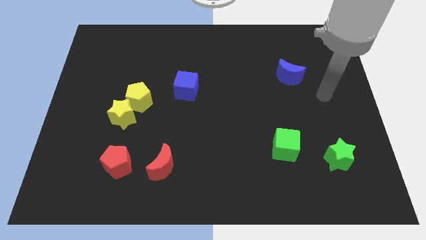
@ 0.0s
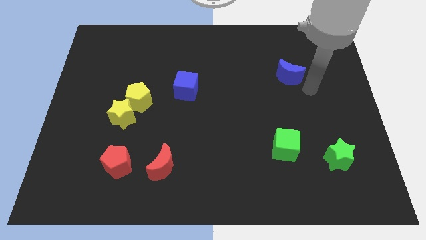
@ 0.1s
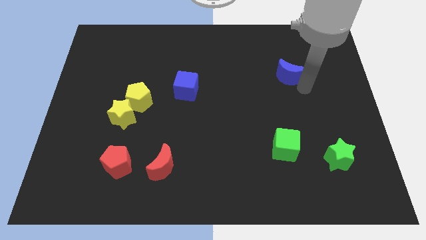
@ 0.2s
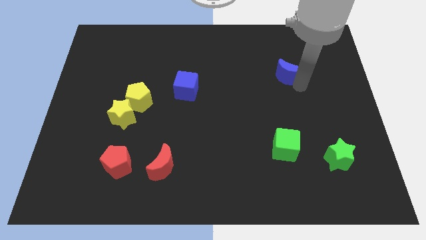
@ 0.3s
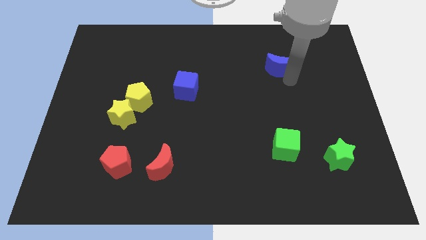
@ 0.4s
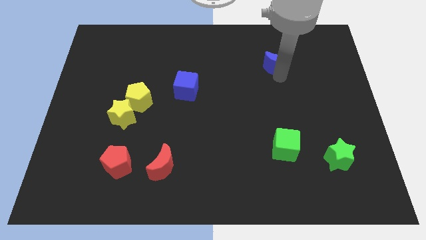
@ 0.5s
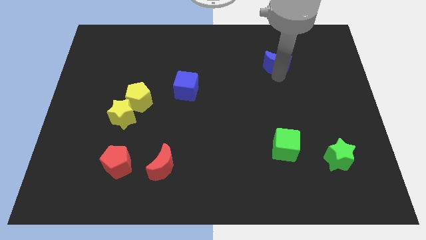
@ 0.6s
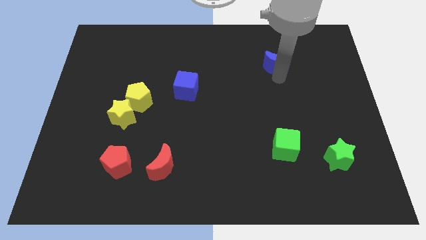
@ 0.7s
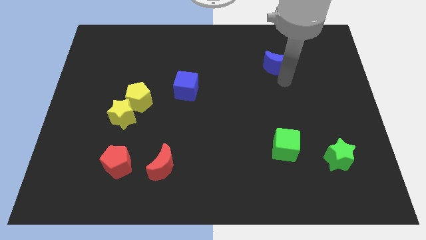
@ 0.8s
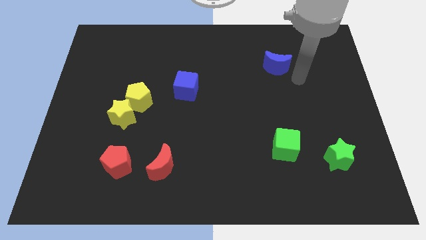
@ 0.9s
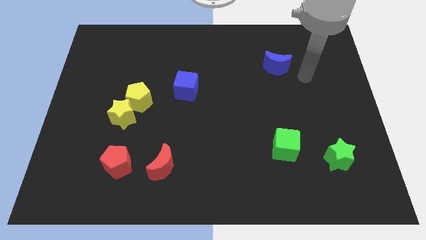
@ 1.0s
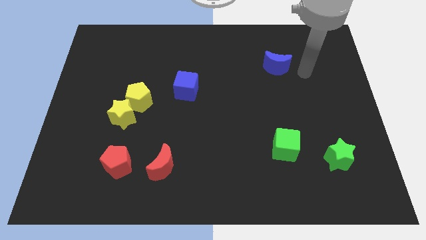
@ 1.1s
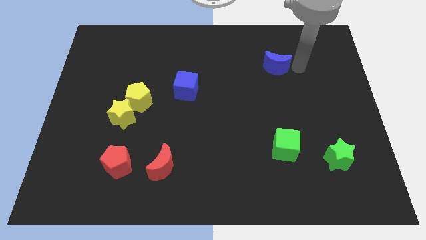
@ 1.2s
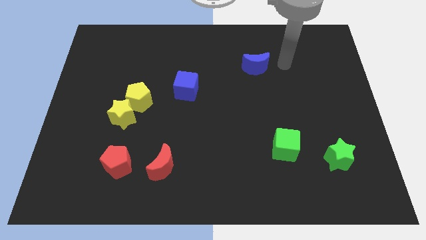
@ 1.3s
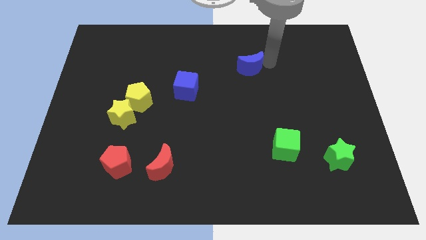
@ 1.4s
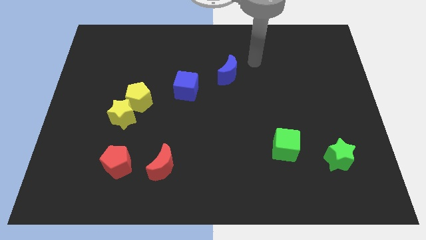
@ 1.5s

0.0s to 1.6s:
move the blue moon slightly left

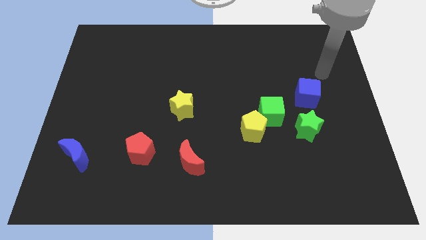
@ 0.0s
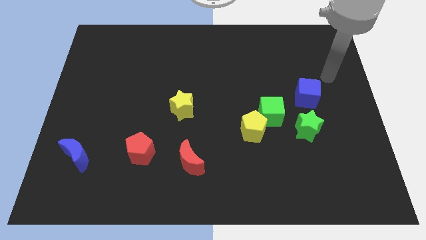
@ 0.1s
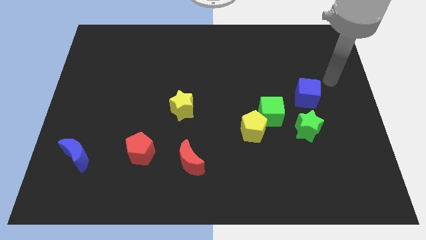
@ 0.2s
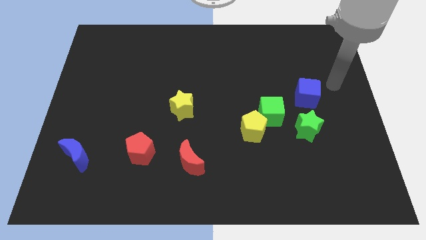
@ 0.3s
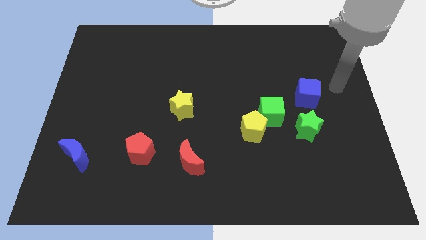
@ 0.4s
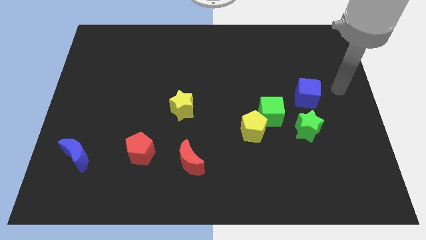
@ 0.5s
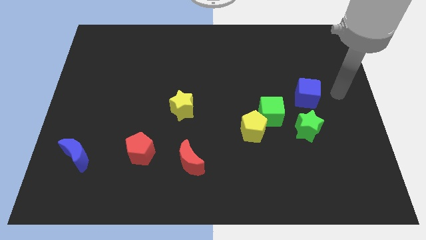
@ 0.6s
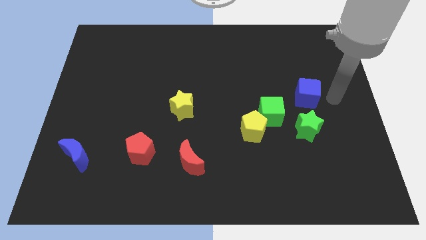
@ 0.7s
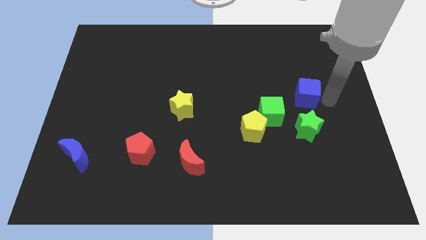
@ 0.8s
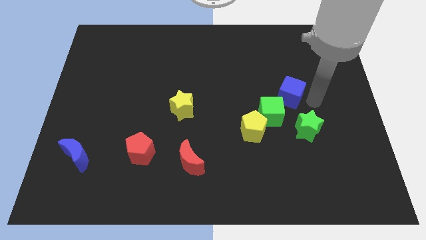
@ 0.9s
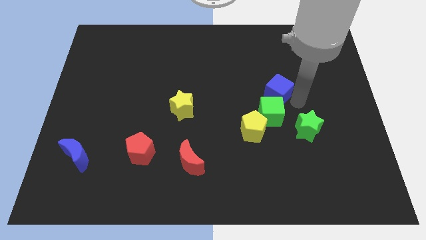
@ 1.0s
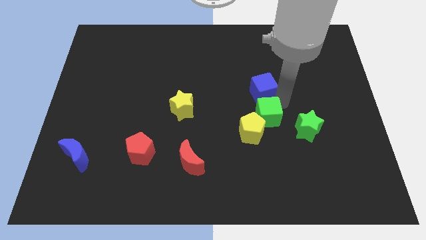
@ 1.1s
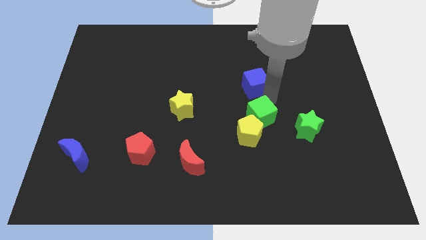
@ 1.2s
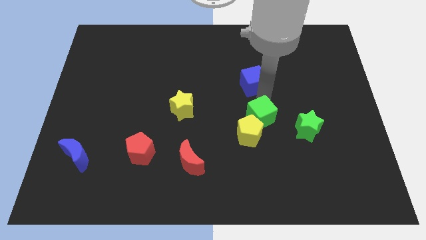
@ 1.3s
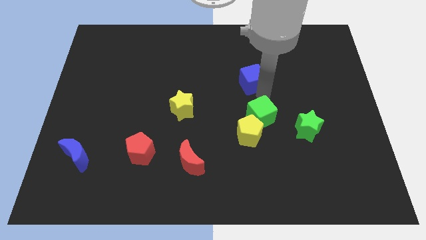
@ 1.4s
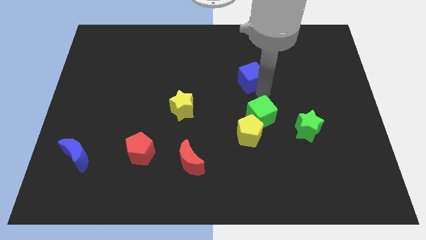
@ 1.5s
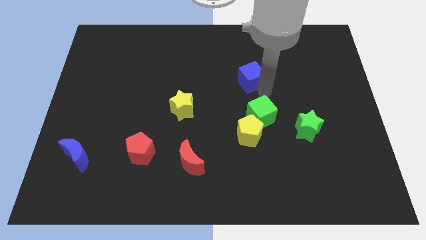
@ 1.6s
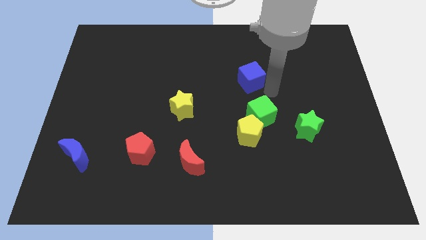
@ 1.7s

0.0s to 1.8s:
push the blue cube to the top of the green cube

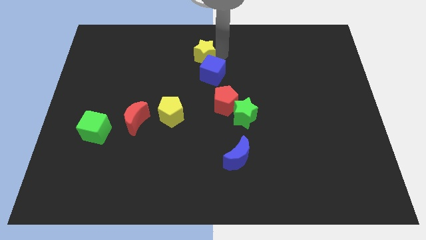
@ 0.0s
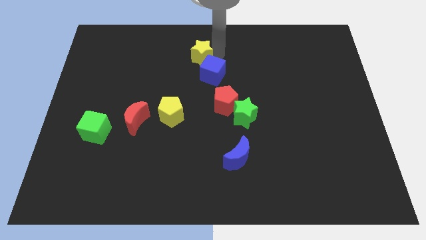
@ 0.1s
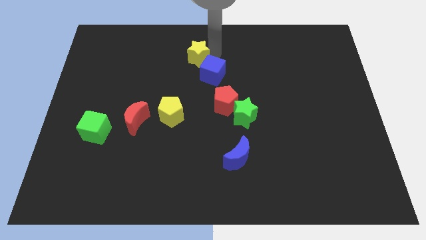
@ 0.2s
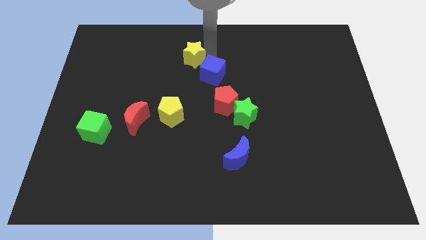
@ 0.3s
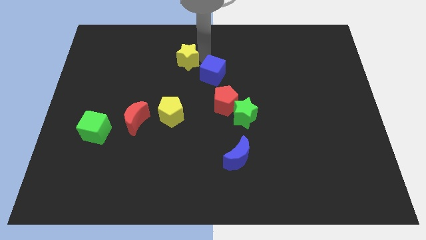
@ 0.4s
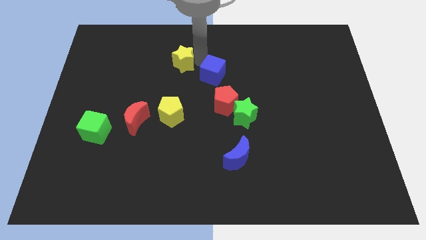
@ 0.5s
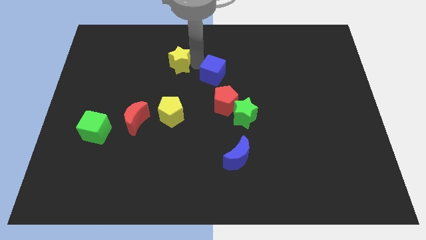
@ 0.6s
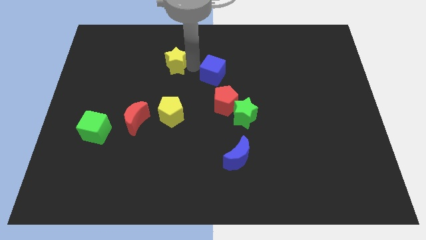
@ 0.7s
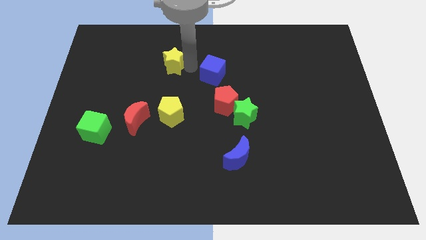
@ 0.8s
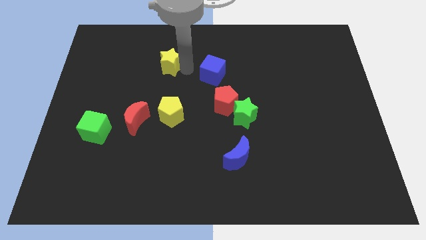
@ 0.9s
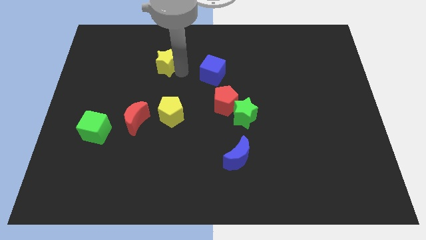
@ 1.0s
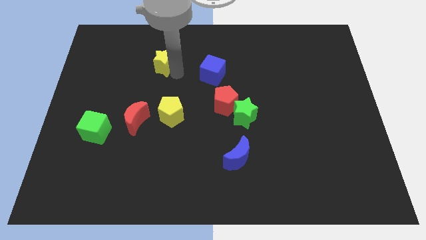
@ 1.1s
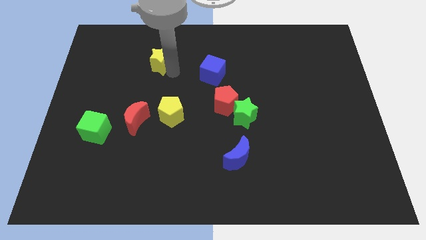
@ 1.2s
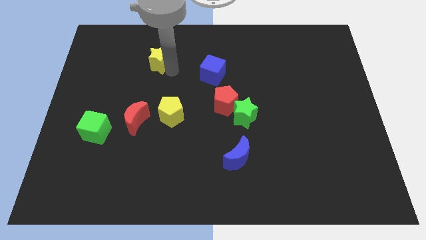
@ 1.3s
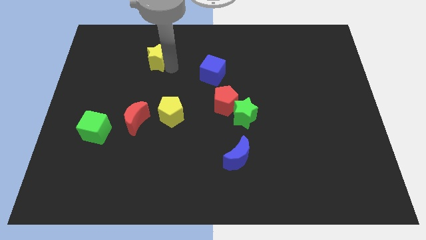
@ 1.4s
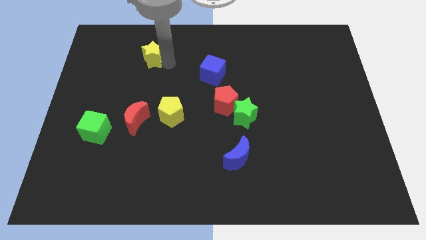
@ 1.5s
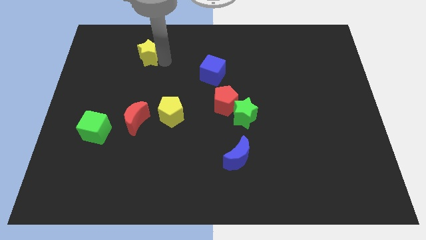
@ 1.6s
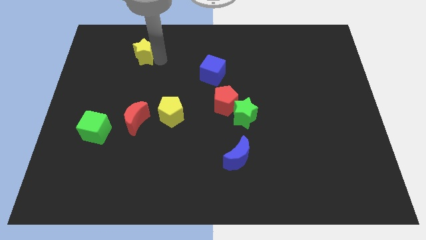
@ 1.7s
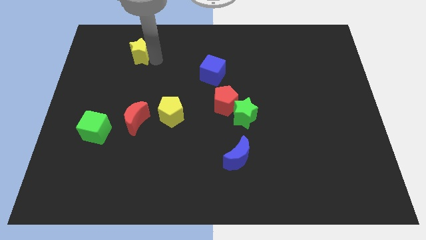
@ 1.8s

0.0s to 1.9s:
place the yellow star vertically above the red moon

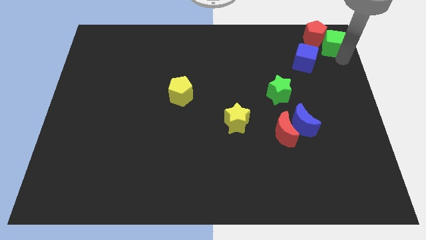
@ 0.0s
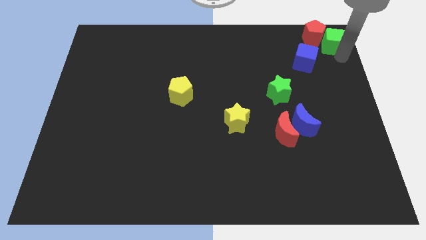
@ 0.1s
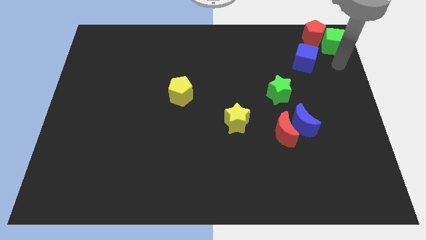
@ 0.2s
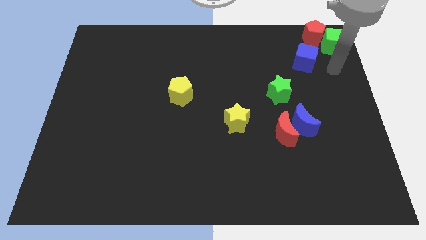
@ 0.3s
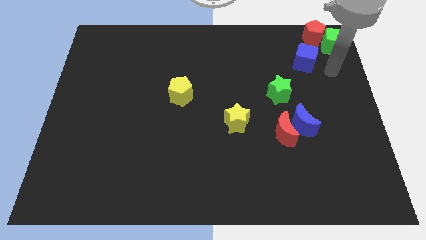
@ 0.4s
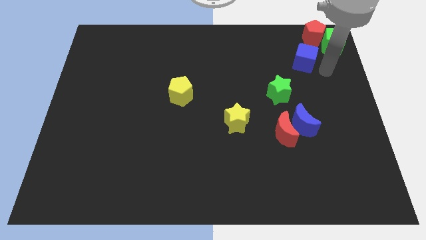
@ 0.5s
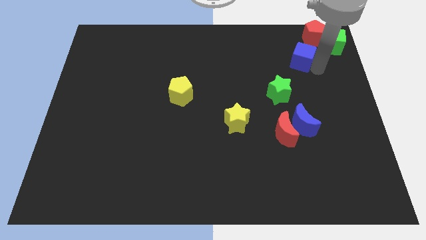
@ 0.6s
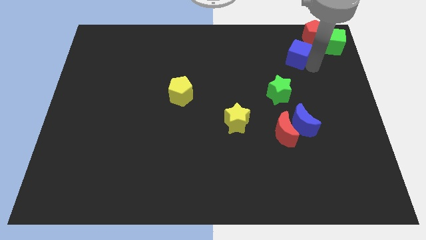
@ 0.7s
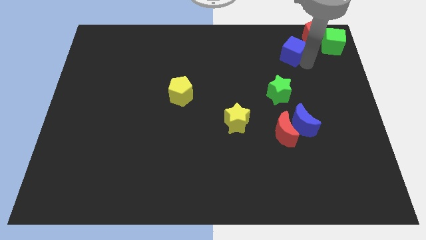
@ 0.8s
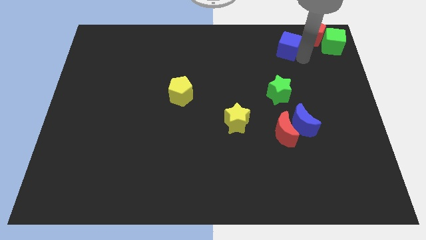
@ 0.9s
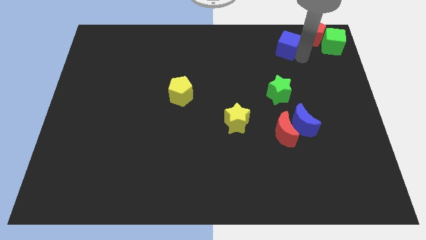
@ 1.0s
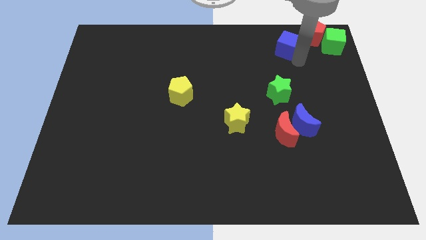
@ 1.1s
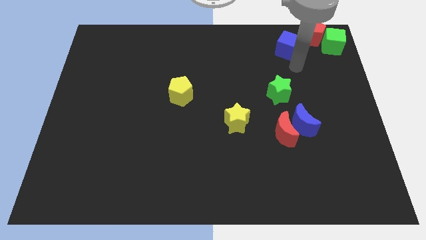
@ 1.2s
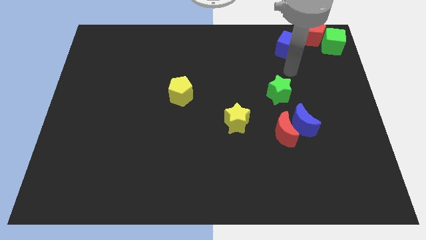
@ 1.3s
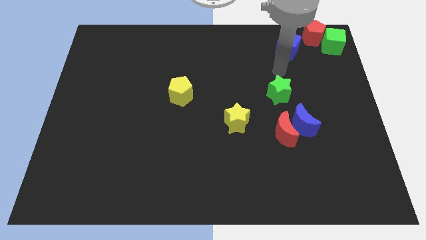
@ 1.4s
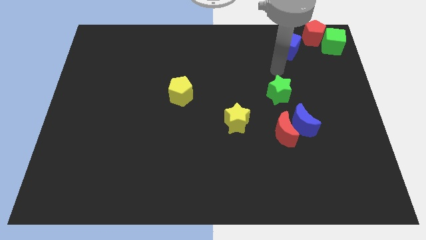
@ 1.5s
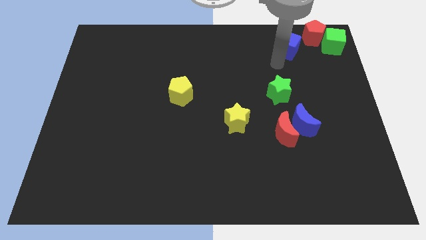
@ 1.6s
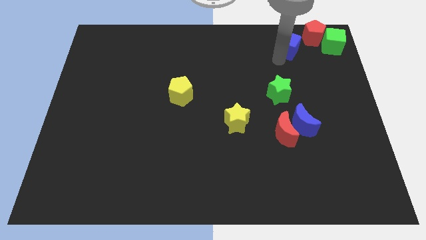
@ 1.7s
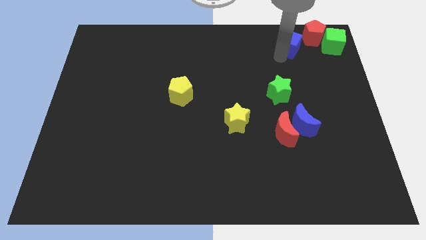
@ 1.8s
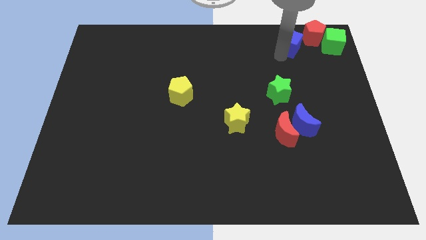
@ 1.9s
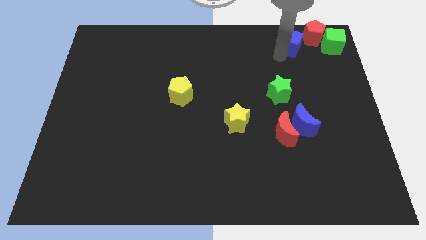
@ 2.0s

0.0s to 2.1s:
move blue cube to the left of green cube

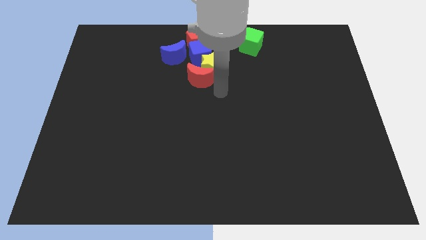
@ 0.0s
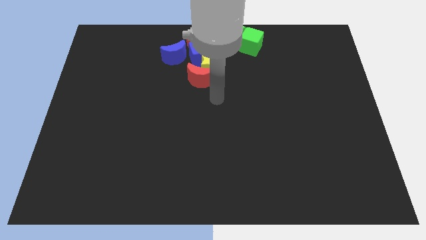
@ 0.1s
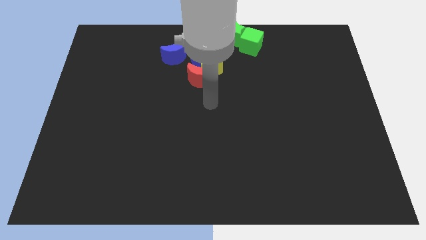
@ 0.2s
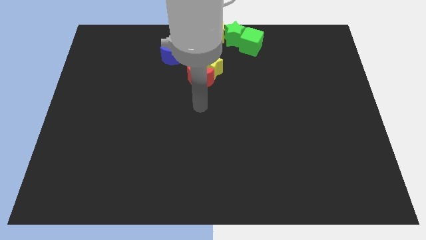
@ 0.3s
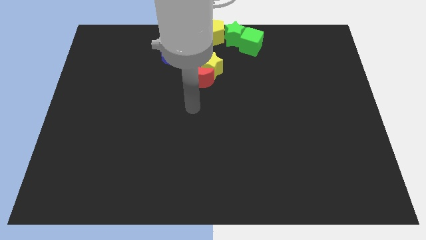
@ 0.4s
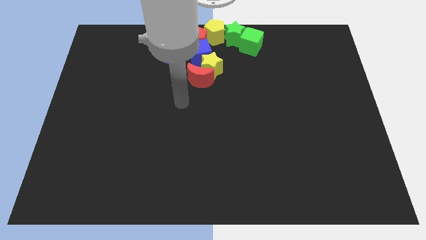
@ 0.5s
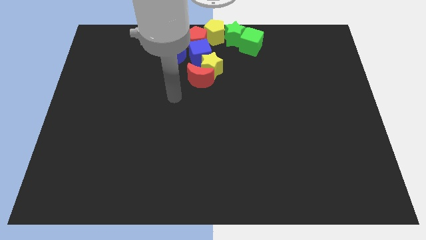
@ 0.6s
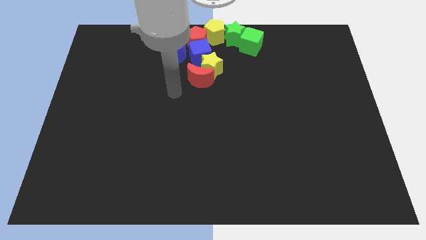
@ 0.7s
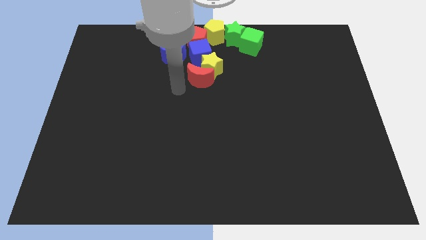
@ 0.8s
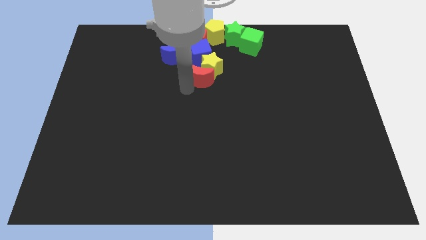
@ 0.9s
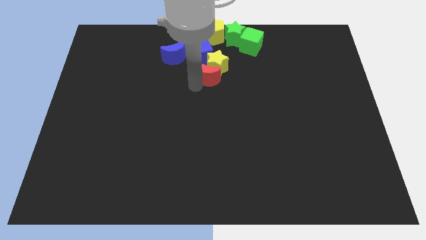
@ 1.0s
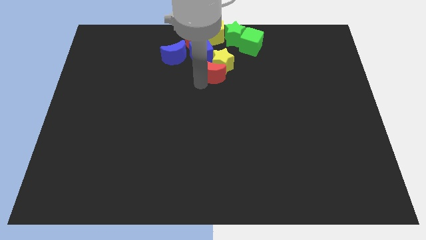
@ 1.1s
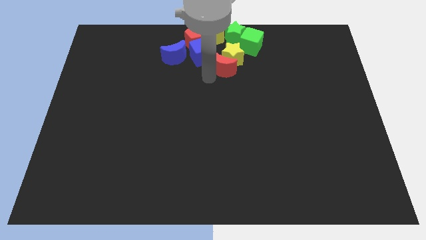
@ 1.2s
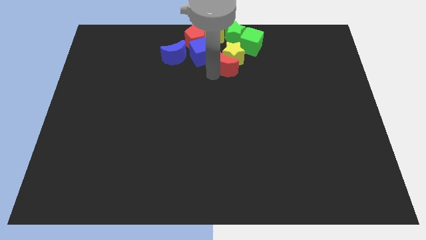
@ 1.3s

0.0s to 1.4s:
move the red crescent along with yellow star below the green star

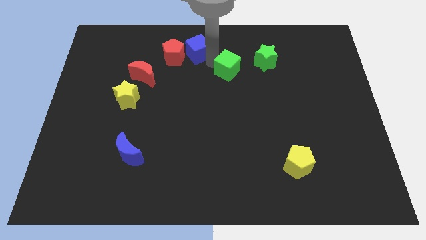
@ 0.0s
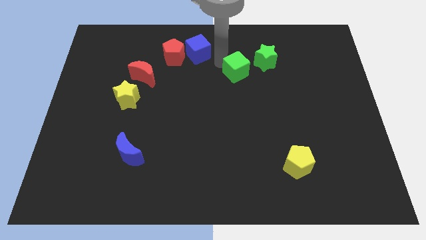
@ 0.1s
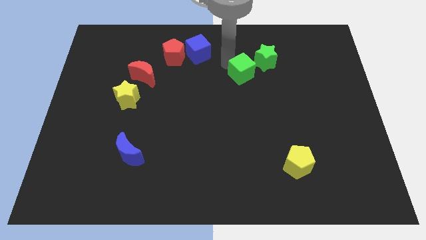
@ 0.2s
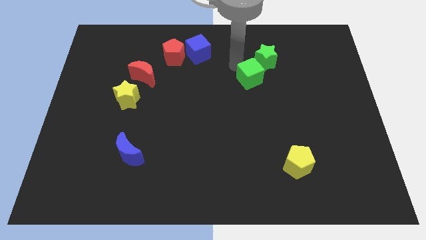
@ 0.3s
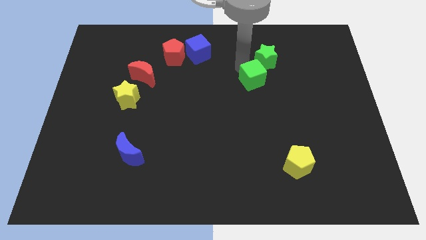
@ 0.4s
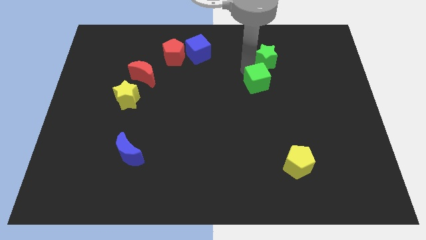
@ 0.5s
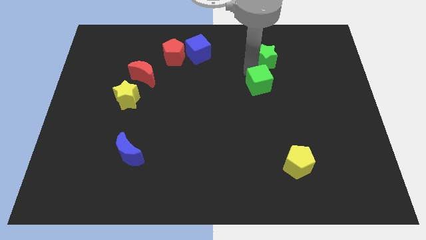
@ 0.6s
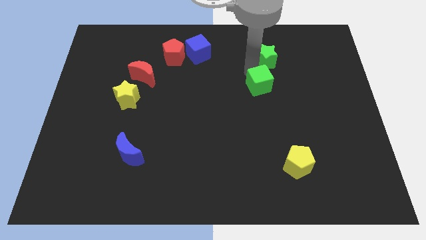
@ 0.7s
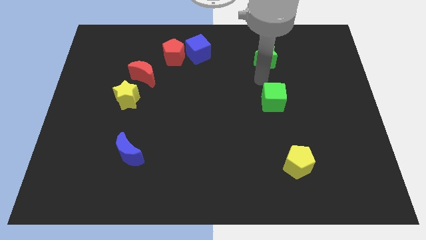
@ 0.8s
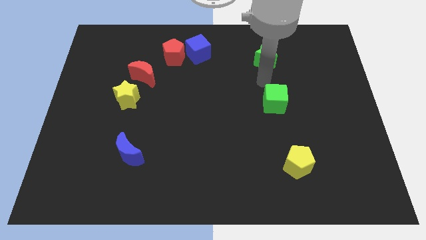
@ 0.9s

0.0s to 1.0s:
move the green cube vertically below the green star
